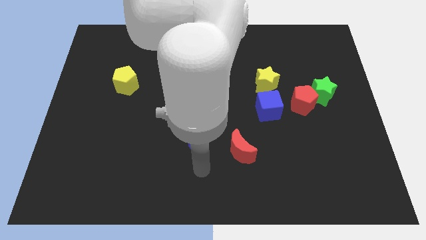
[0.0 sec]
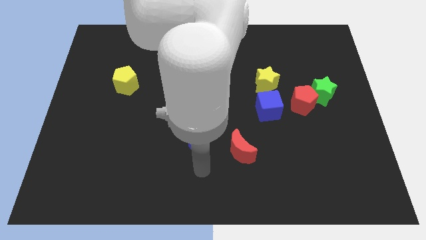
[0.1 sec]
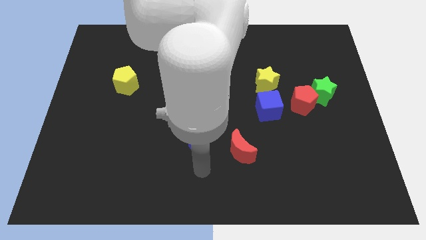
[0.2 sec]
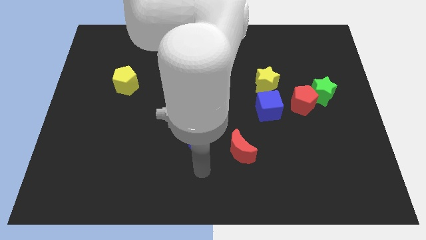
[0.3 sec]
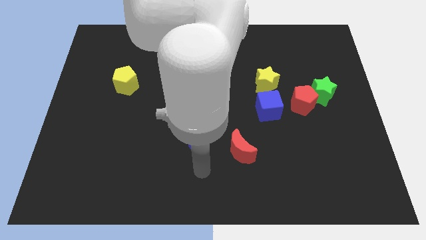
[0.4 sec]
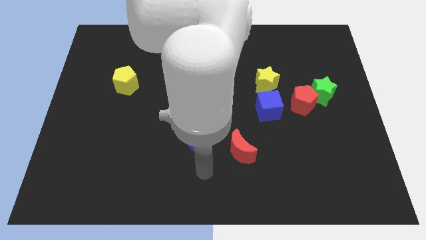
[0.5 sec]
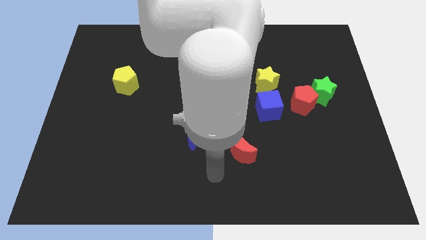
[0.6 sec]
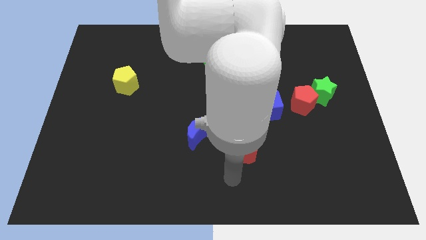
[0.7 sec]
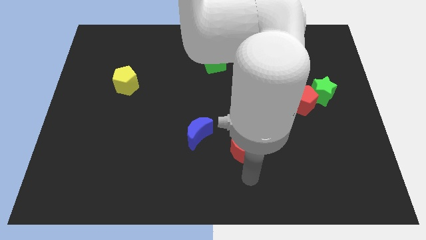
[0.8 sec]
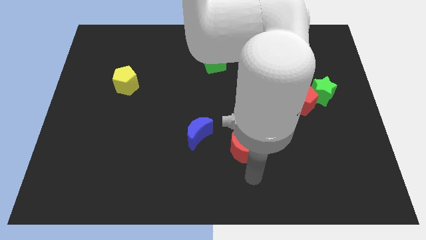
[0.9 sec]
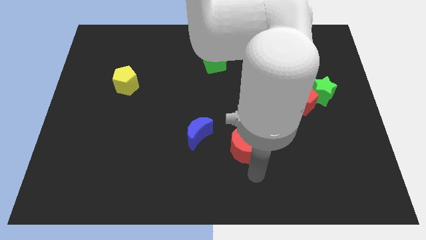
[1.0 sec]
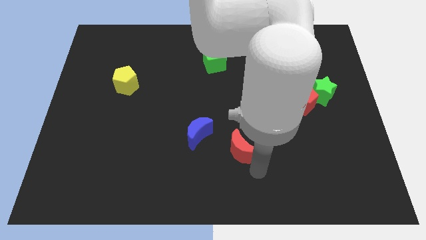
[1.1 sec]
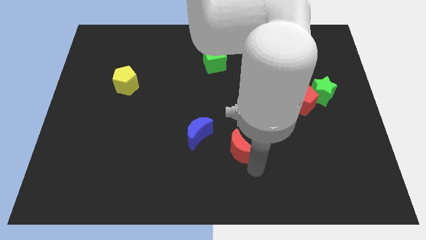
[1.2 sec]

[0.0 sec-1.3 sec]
move your arm to the bottom of red crescent

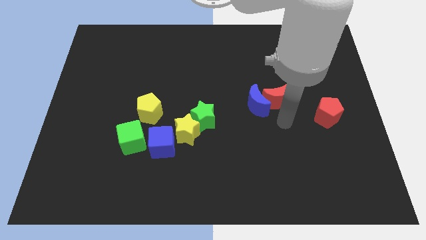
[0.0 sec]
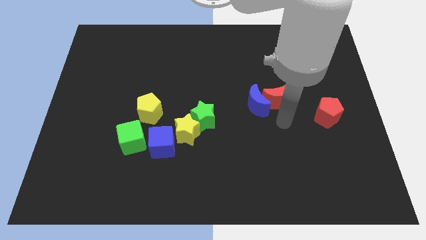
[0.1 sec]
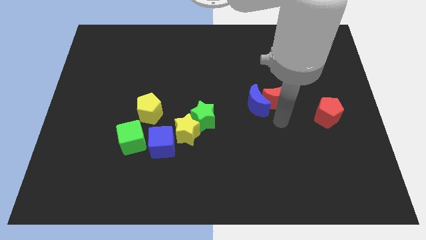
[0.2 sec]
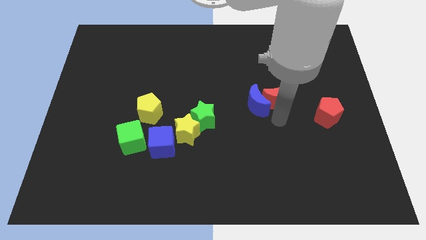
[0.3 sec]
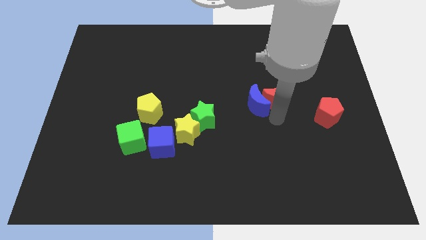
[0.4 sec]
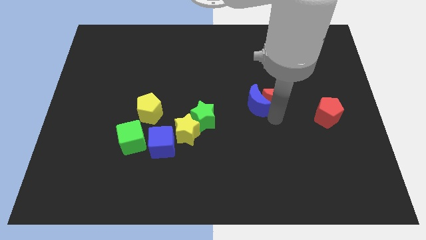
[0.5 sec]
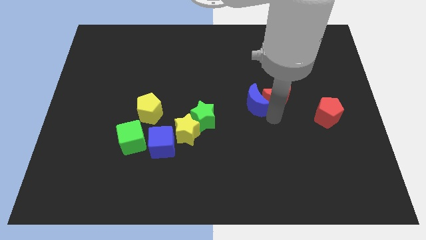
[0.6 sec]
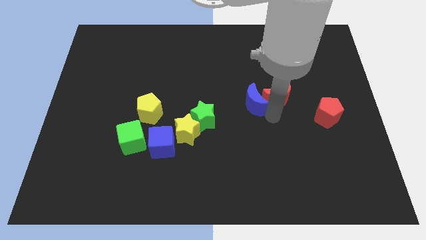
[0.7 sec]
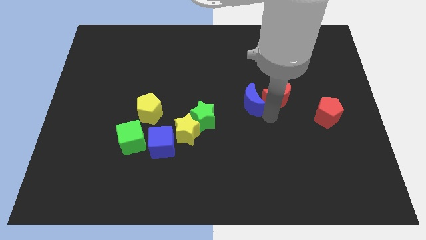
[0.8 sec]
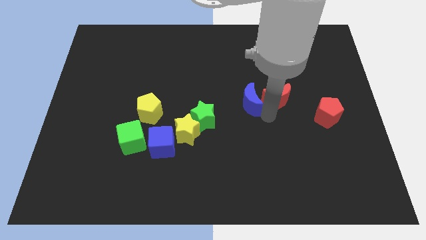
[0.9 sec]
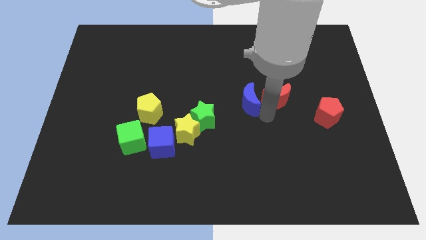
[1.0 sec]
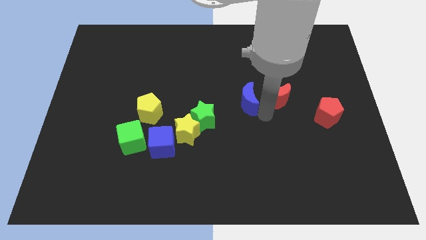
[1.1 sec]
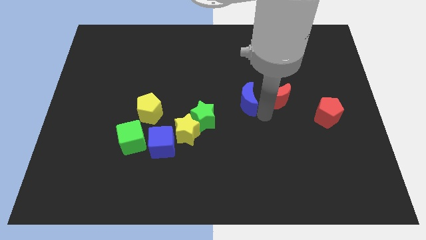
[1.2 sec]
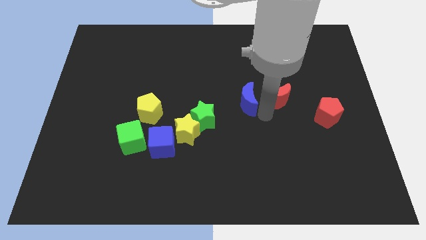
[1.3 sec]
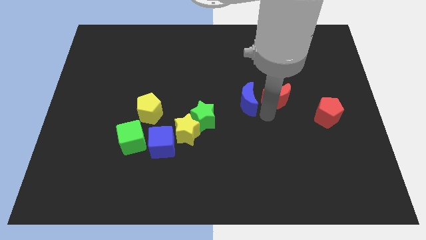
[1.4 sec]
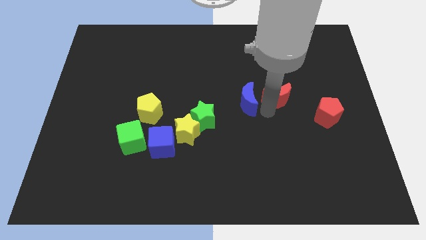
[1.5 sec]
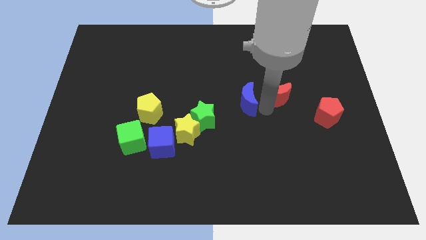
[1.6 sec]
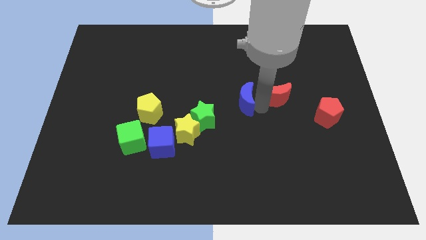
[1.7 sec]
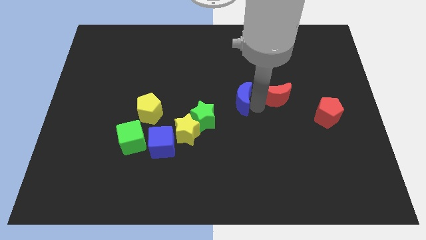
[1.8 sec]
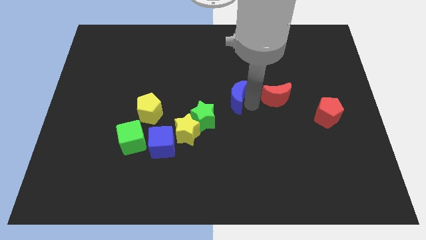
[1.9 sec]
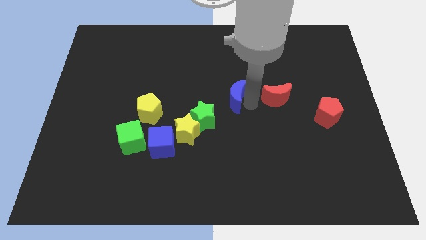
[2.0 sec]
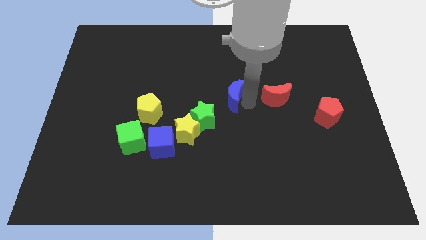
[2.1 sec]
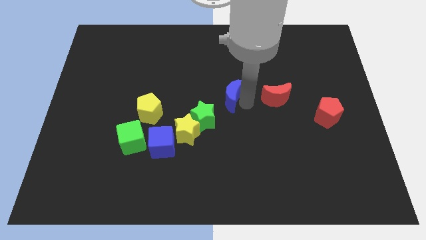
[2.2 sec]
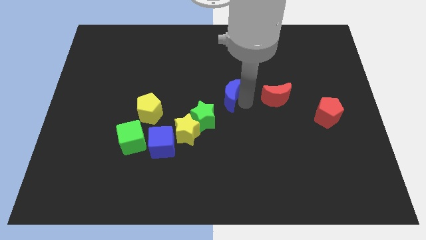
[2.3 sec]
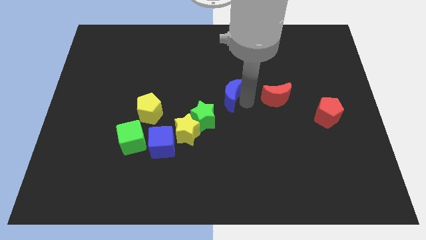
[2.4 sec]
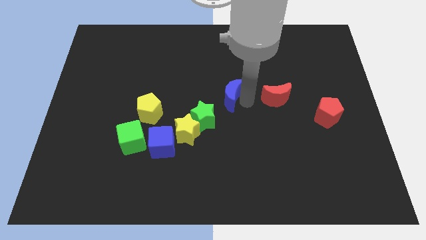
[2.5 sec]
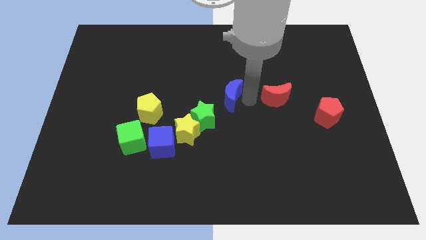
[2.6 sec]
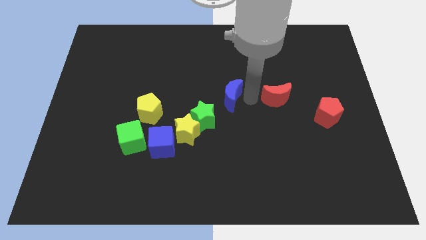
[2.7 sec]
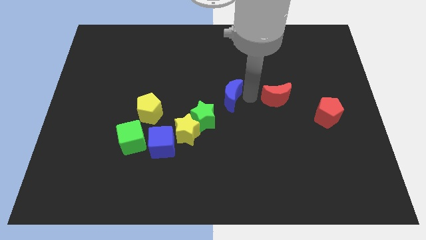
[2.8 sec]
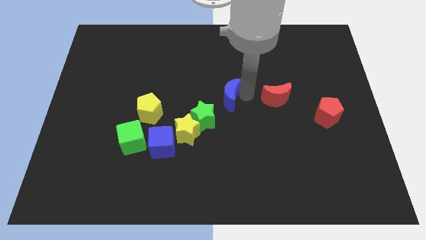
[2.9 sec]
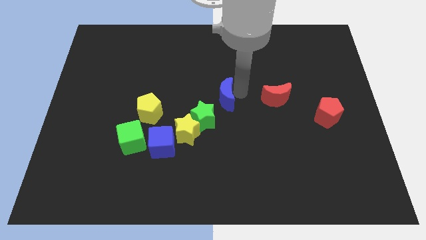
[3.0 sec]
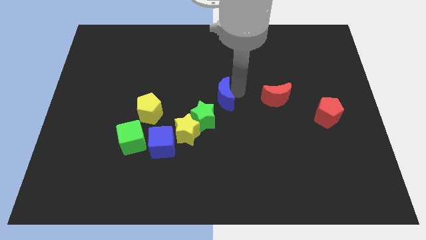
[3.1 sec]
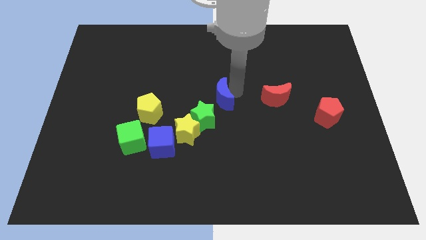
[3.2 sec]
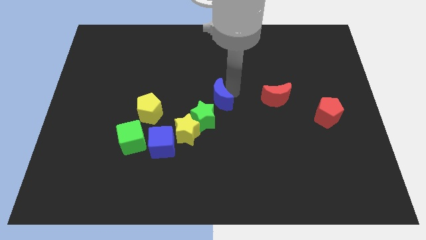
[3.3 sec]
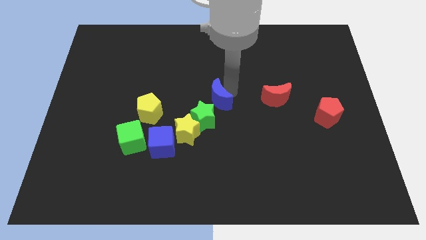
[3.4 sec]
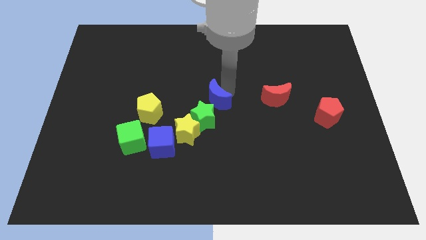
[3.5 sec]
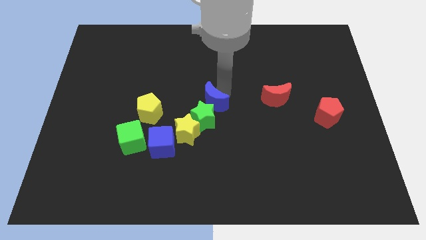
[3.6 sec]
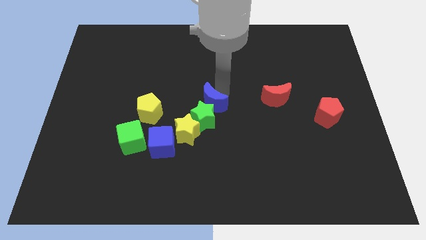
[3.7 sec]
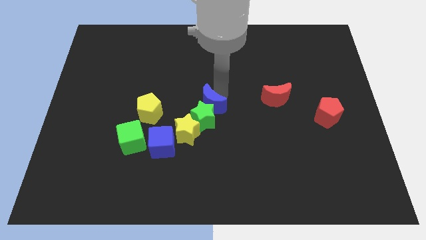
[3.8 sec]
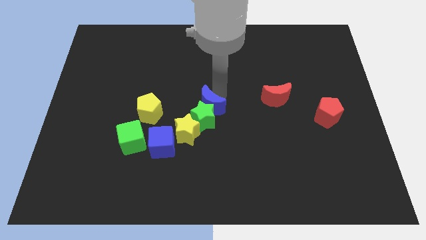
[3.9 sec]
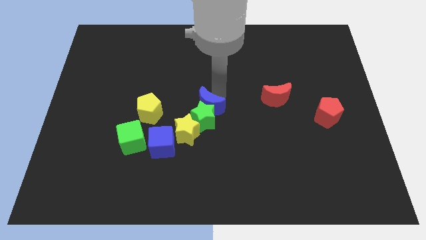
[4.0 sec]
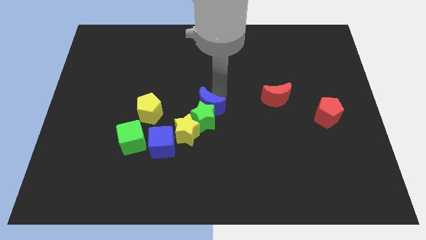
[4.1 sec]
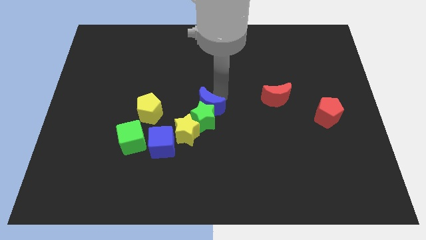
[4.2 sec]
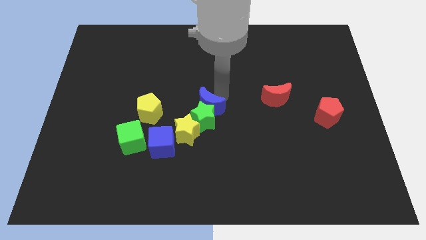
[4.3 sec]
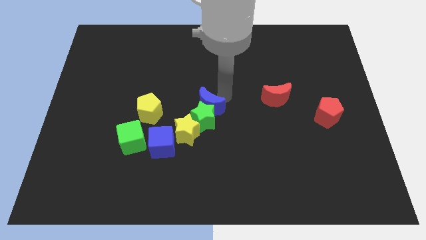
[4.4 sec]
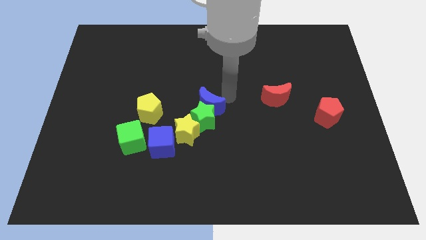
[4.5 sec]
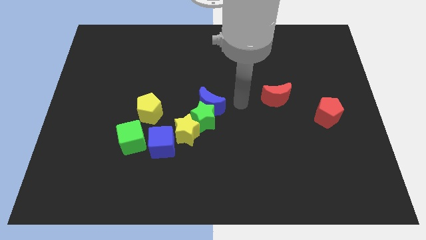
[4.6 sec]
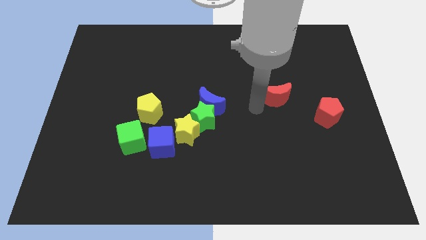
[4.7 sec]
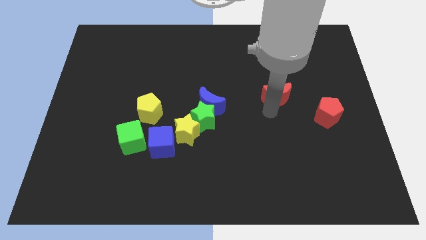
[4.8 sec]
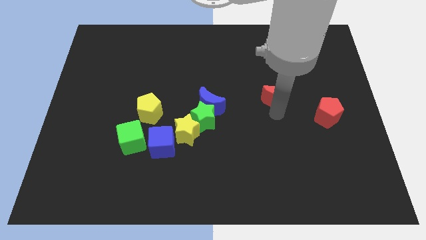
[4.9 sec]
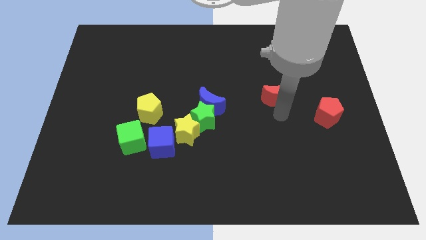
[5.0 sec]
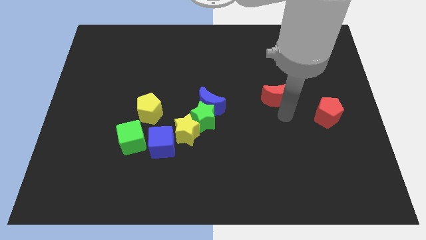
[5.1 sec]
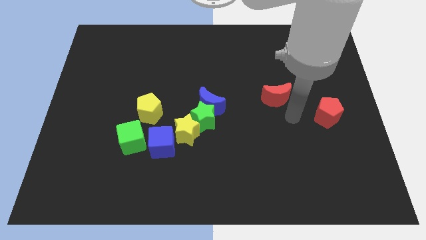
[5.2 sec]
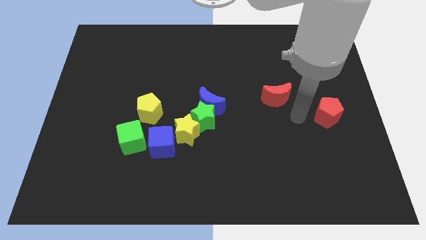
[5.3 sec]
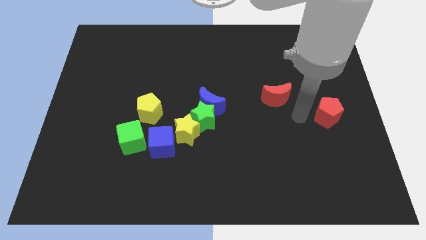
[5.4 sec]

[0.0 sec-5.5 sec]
push the blue moon into the green star

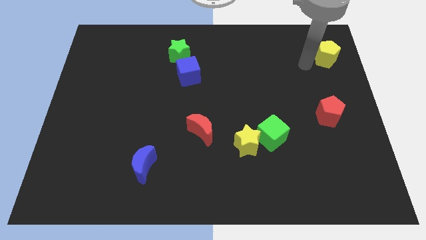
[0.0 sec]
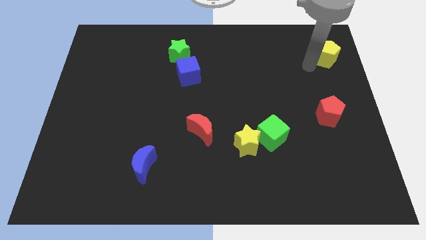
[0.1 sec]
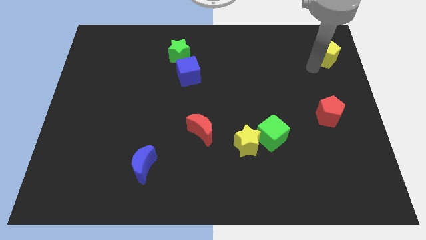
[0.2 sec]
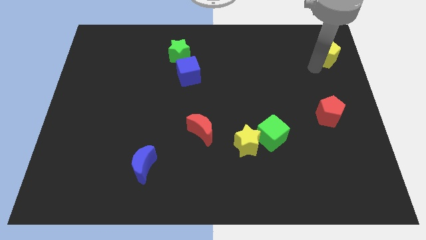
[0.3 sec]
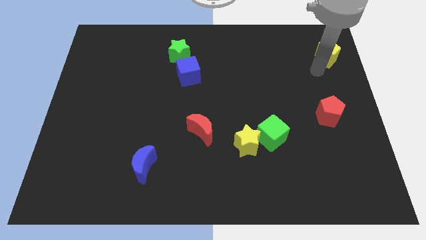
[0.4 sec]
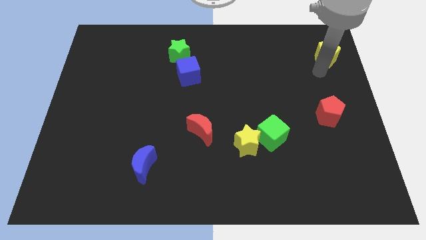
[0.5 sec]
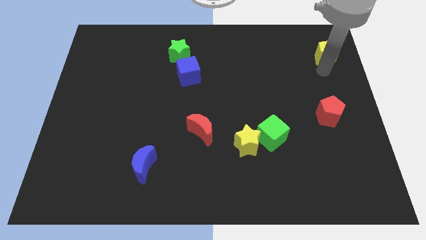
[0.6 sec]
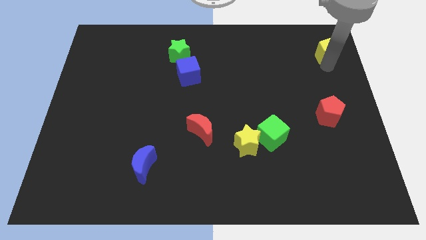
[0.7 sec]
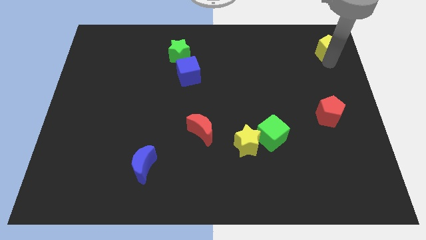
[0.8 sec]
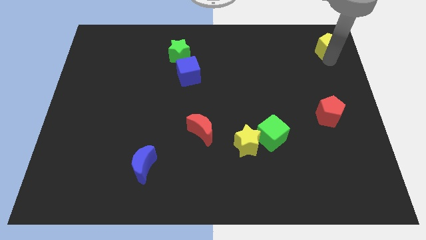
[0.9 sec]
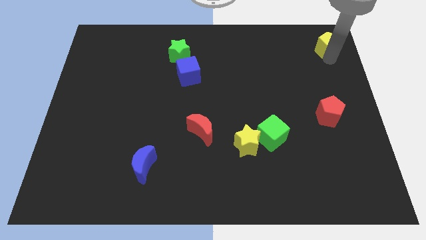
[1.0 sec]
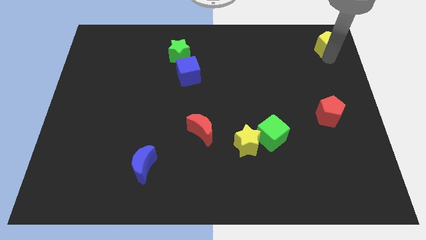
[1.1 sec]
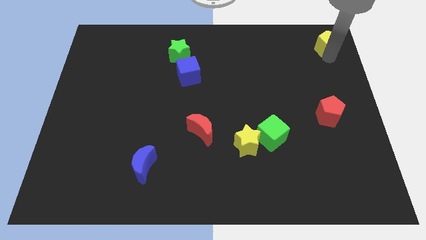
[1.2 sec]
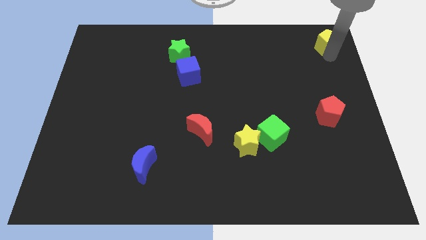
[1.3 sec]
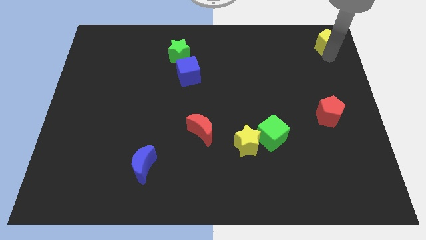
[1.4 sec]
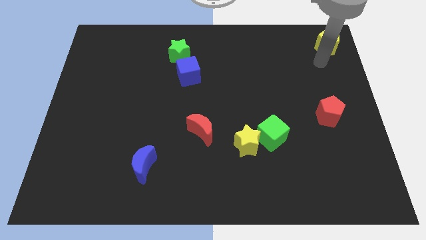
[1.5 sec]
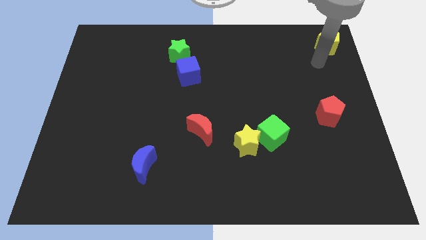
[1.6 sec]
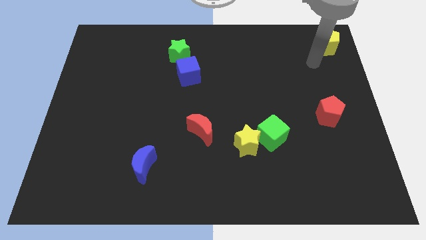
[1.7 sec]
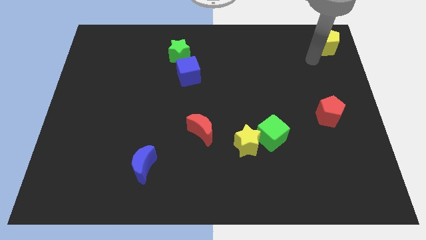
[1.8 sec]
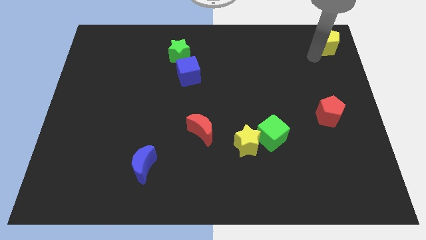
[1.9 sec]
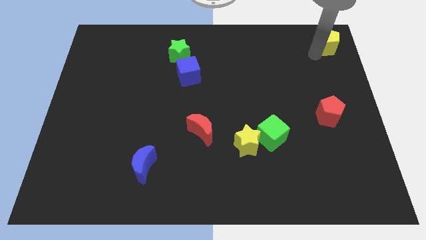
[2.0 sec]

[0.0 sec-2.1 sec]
move the yellow pentagon to the top right corner

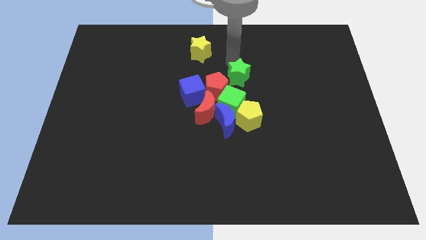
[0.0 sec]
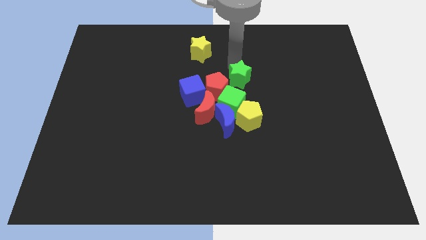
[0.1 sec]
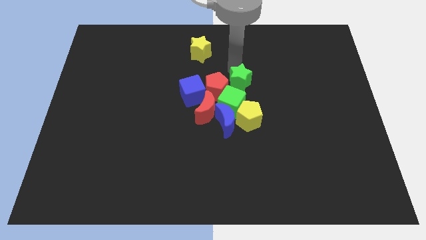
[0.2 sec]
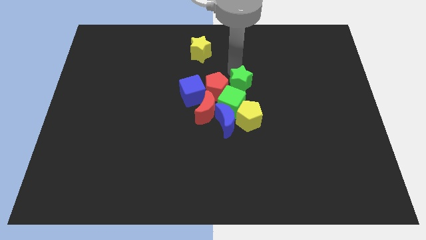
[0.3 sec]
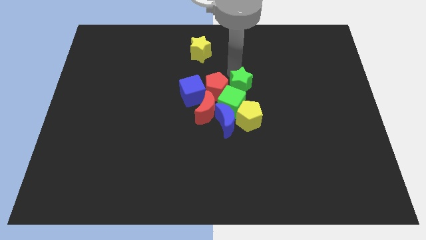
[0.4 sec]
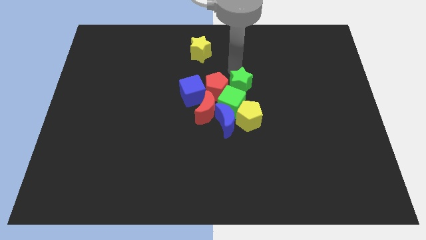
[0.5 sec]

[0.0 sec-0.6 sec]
push the green star downwards to the green cube
